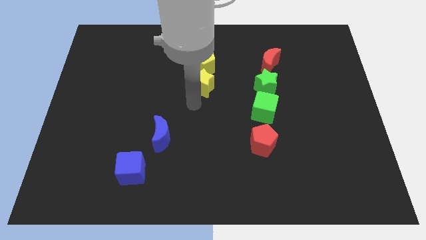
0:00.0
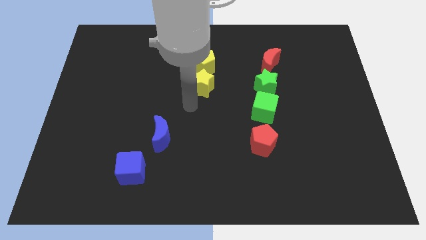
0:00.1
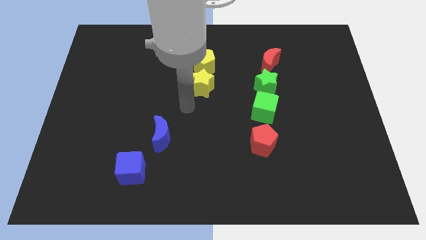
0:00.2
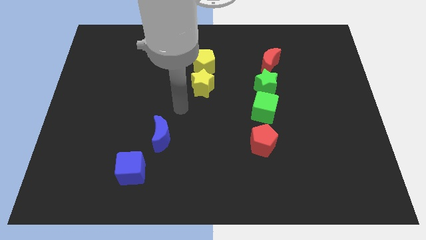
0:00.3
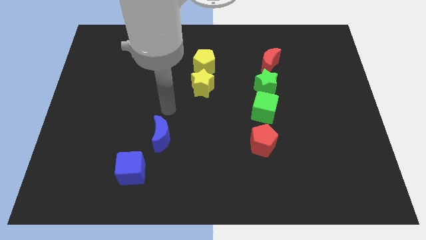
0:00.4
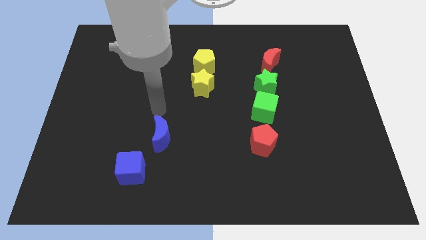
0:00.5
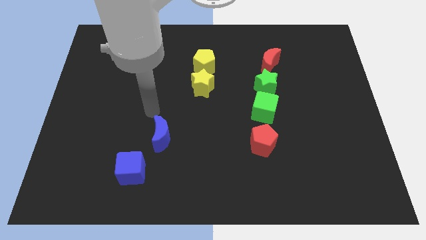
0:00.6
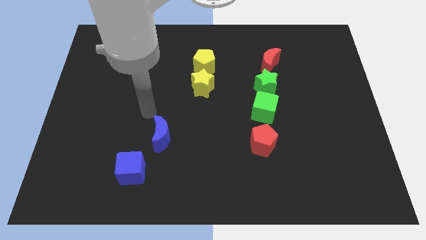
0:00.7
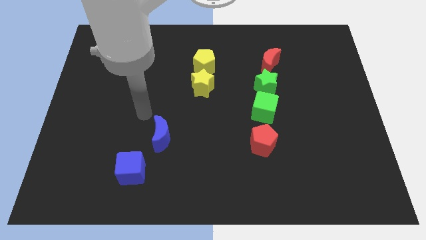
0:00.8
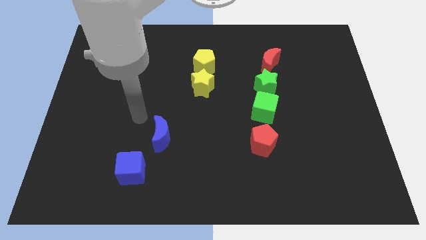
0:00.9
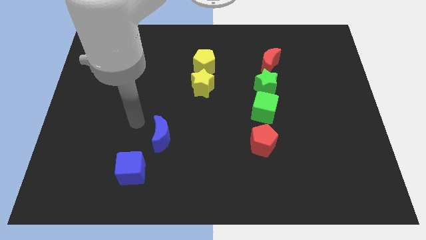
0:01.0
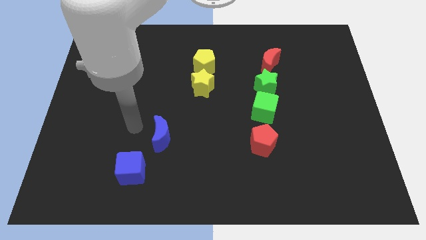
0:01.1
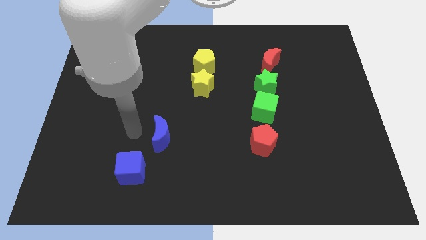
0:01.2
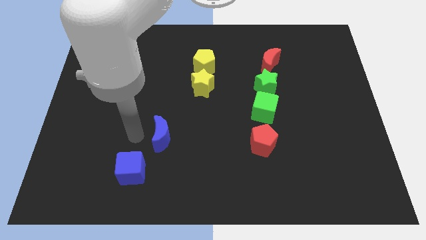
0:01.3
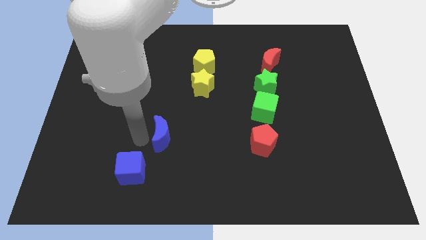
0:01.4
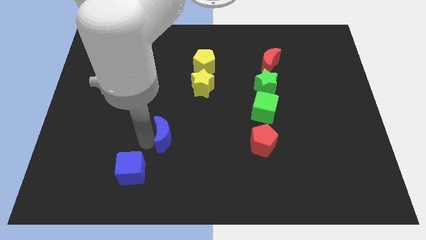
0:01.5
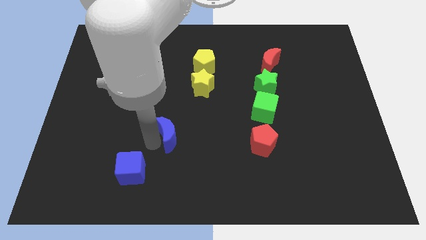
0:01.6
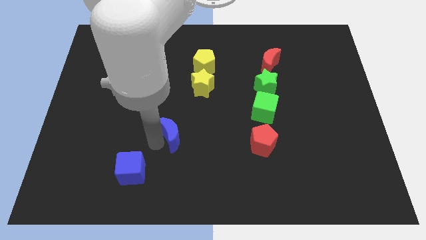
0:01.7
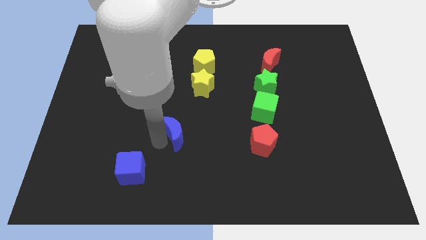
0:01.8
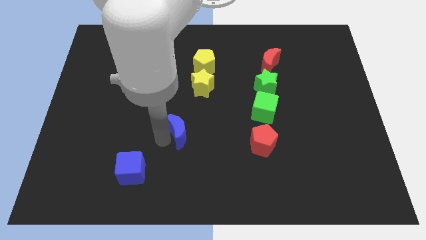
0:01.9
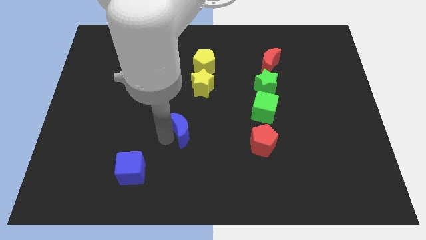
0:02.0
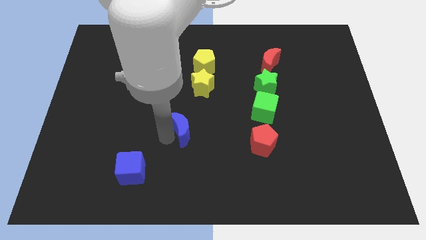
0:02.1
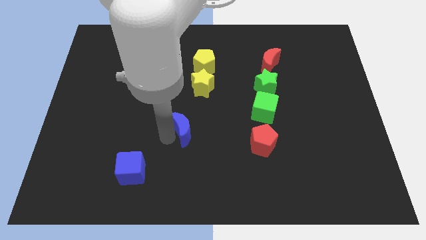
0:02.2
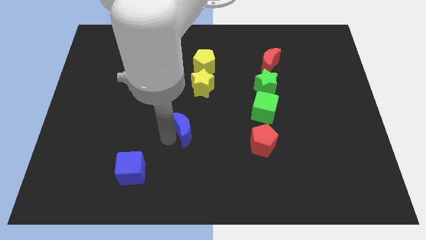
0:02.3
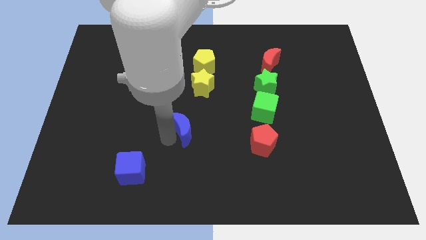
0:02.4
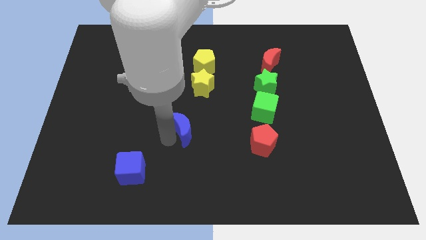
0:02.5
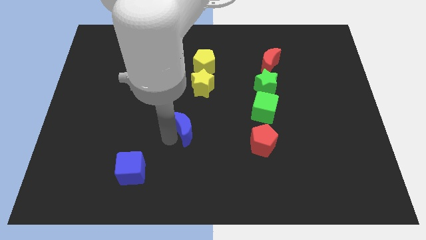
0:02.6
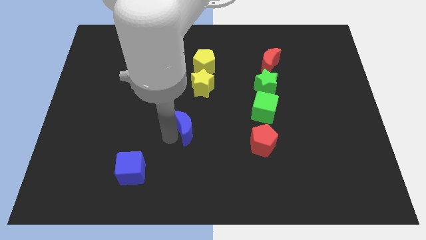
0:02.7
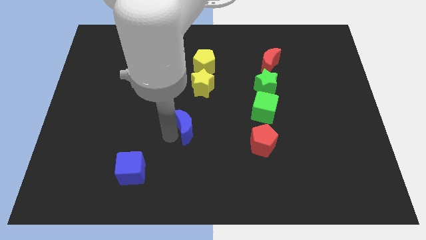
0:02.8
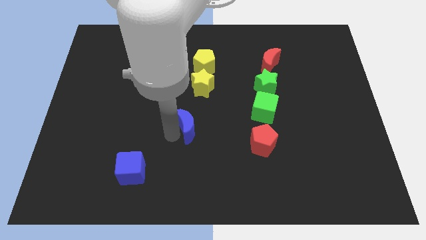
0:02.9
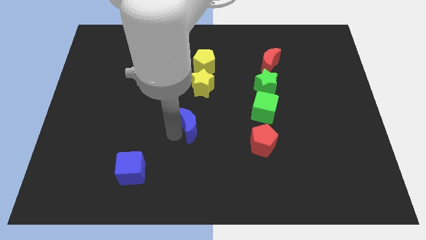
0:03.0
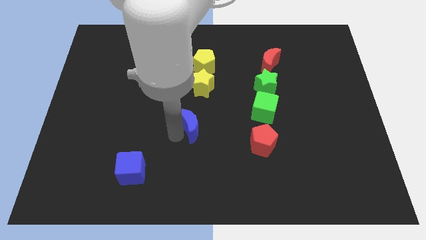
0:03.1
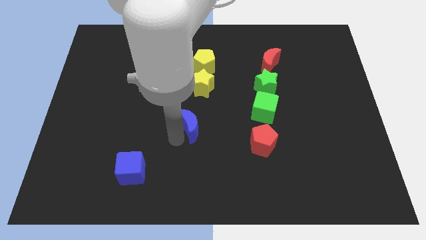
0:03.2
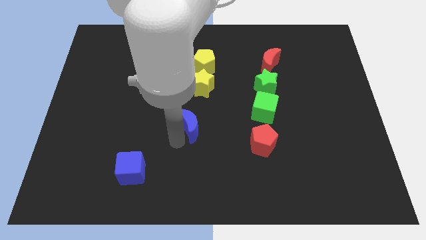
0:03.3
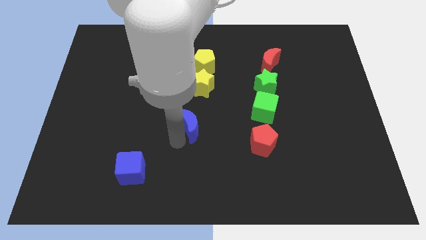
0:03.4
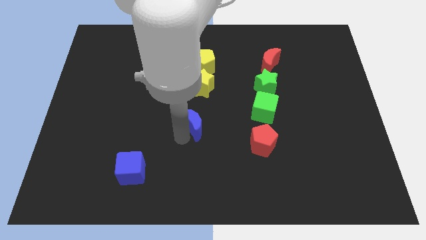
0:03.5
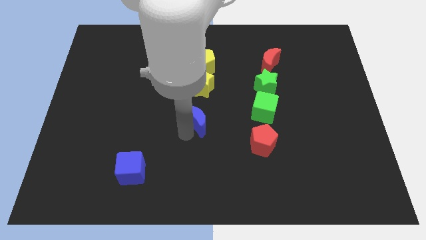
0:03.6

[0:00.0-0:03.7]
move the blue moon under the yellow star

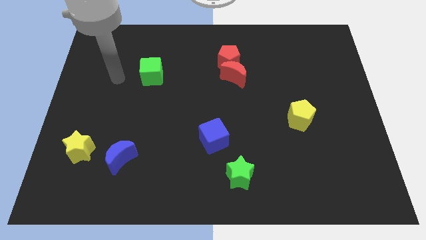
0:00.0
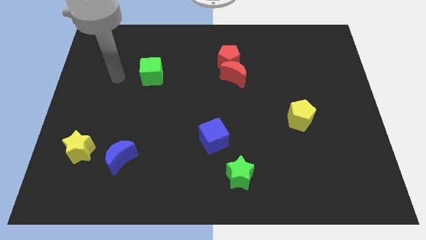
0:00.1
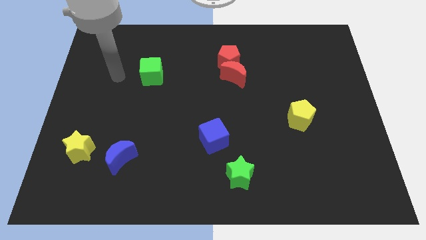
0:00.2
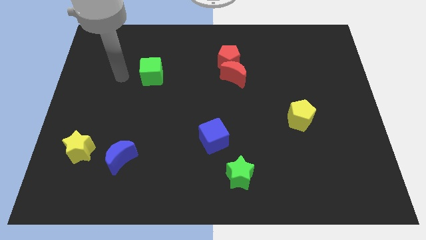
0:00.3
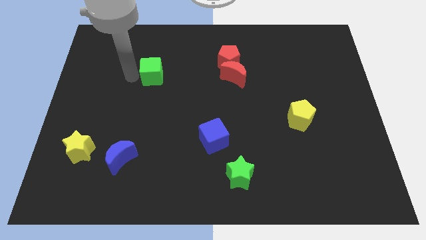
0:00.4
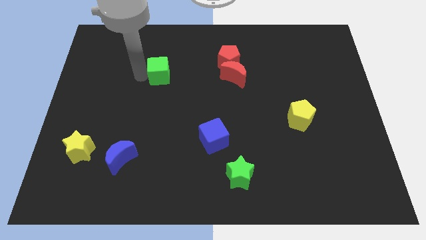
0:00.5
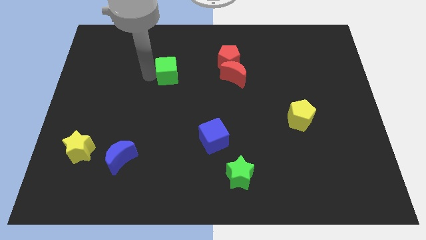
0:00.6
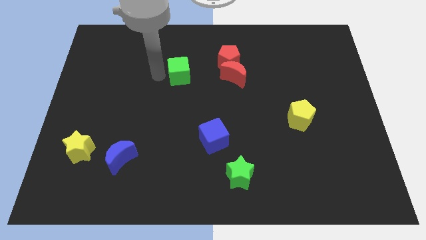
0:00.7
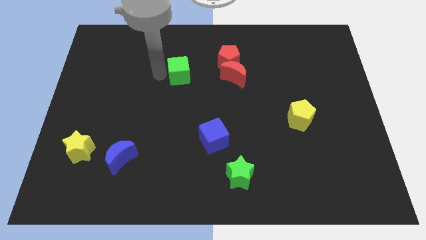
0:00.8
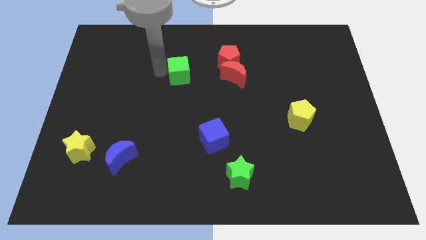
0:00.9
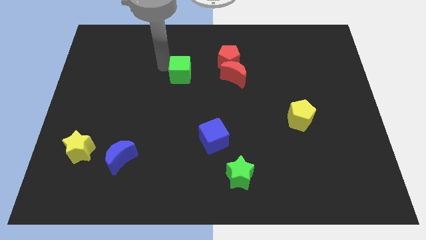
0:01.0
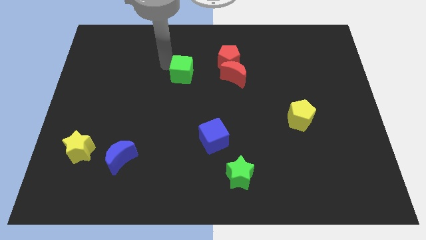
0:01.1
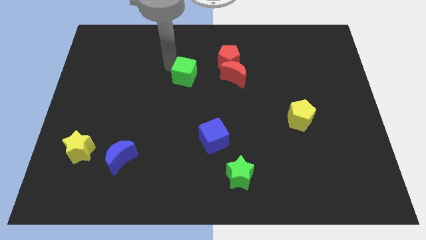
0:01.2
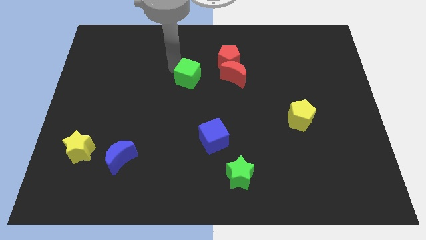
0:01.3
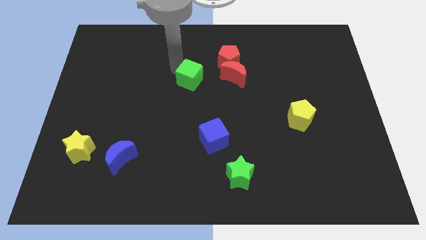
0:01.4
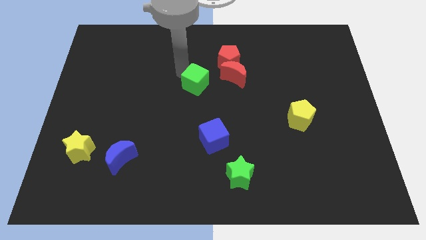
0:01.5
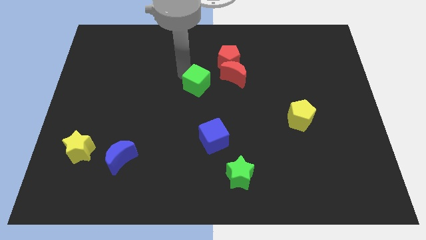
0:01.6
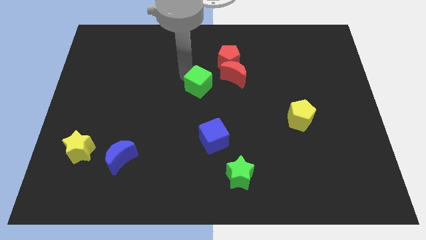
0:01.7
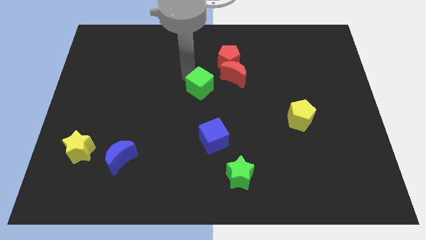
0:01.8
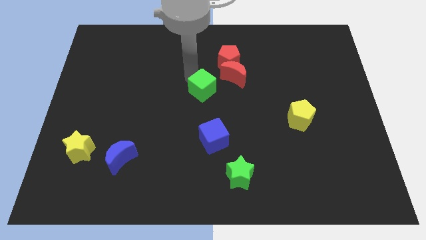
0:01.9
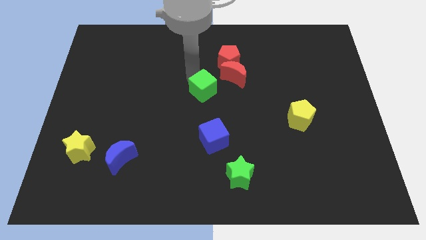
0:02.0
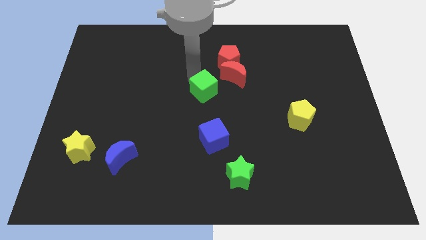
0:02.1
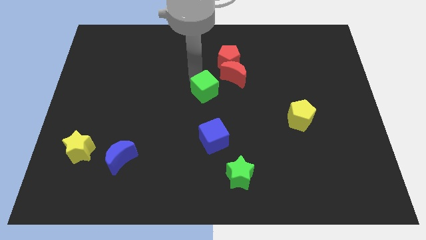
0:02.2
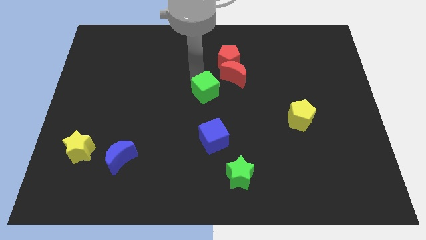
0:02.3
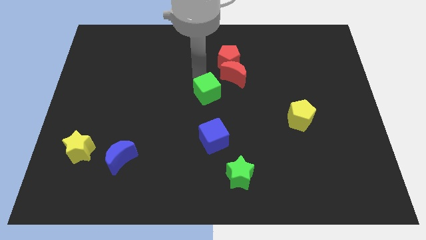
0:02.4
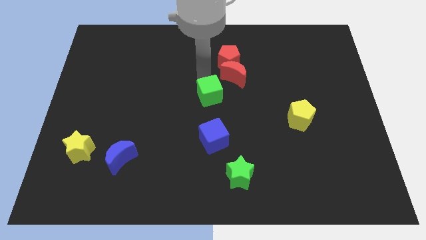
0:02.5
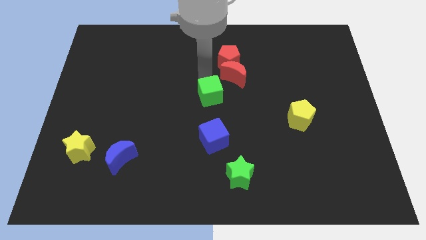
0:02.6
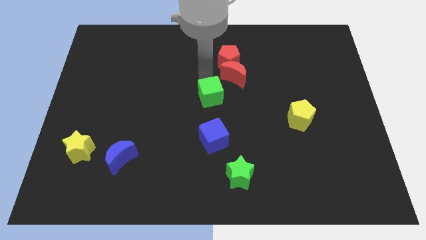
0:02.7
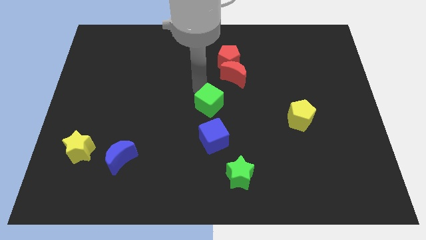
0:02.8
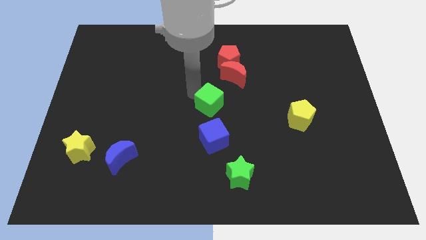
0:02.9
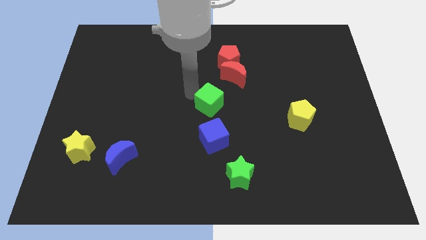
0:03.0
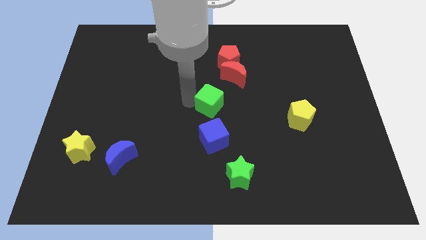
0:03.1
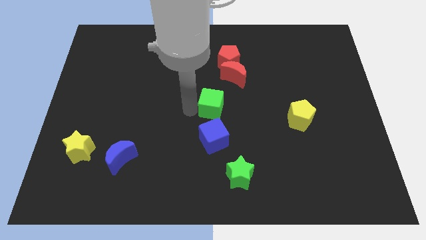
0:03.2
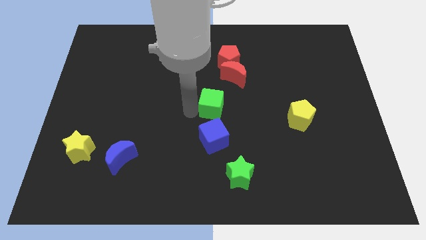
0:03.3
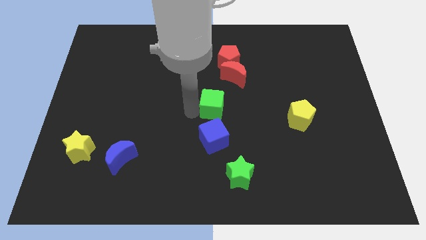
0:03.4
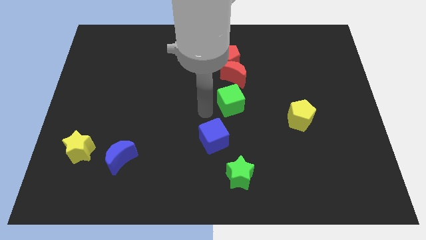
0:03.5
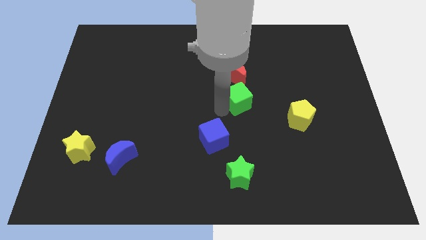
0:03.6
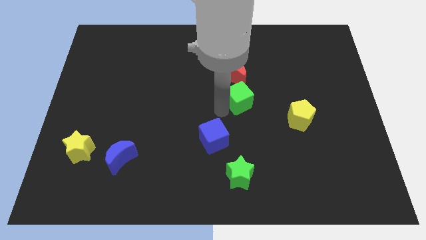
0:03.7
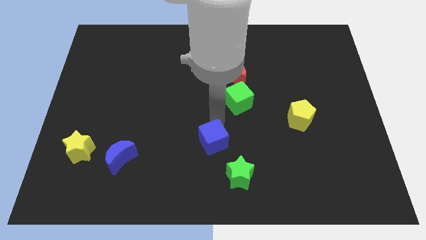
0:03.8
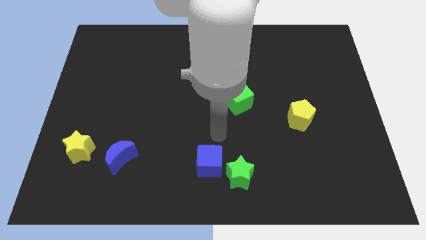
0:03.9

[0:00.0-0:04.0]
push the green cube below the red moon

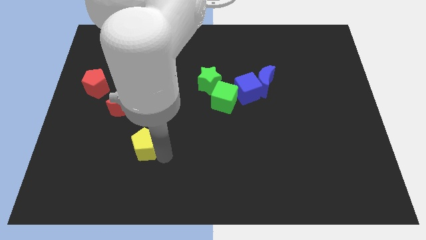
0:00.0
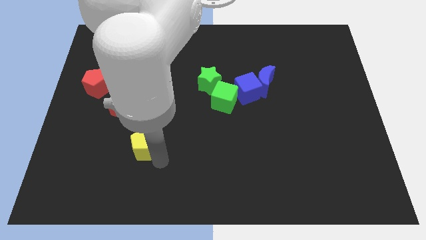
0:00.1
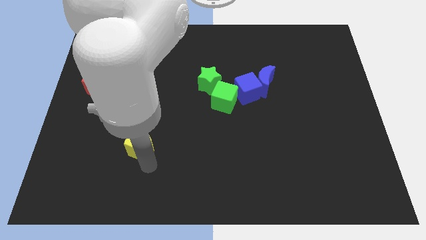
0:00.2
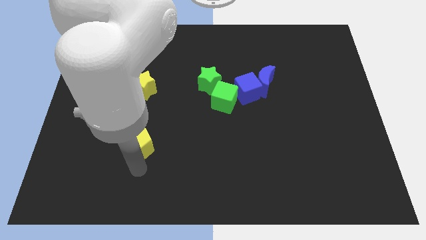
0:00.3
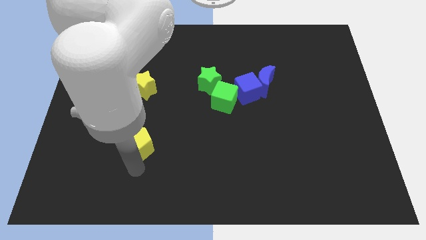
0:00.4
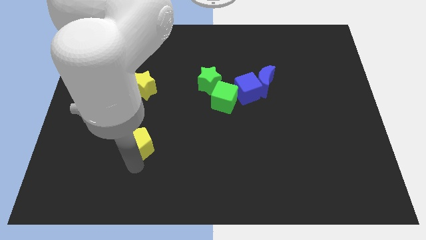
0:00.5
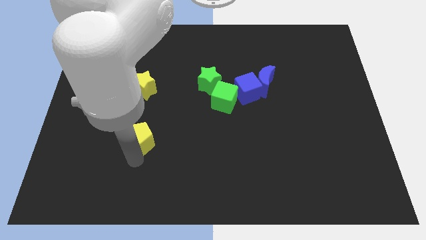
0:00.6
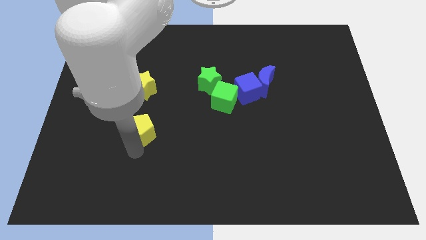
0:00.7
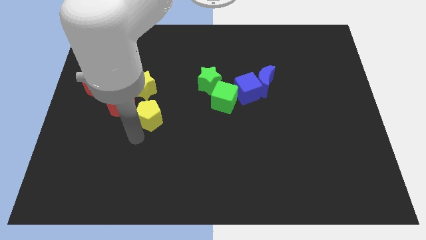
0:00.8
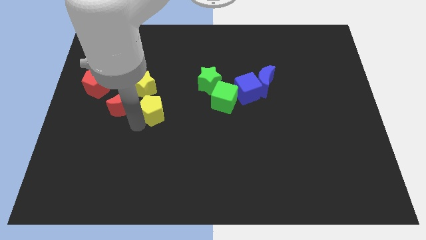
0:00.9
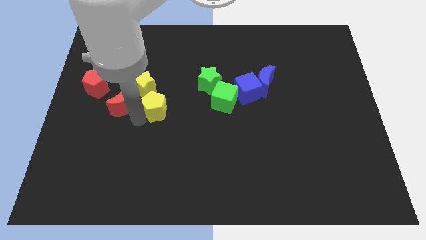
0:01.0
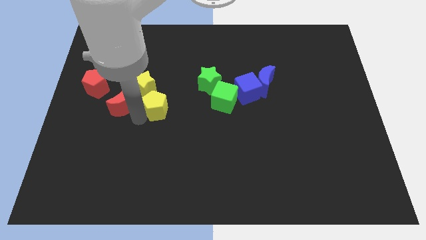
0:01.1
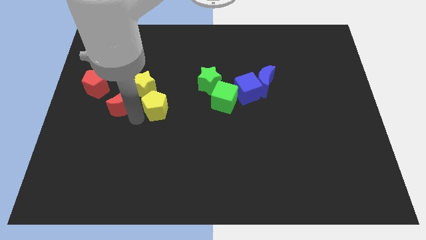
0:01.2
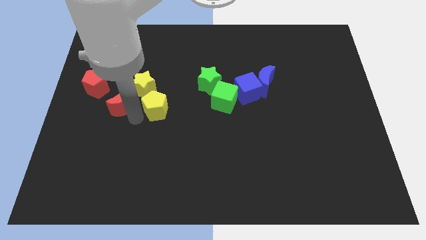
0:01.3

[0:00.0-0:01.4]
drag the yellow pentagon upwards
